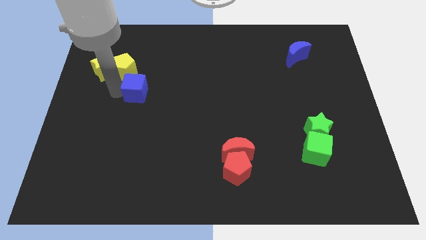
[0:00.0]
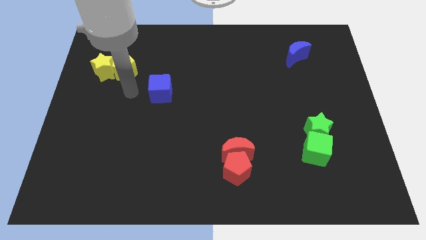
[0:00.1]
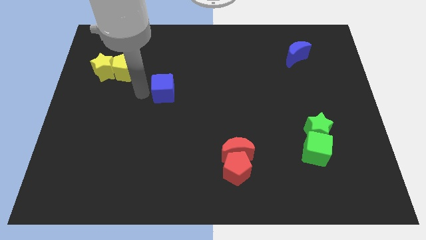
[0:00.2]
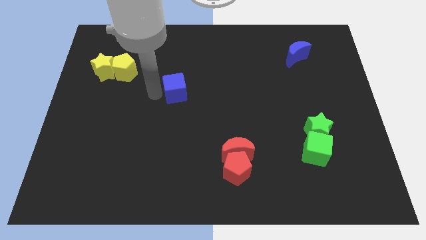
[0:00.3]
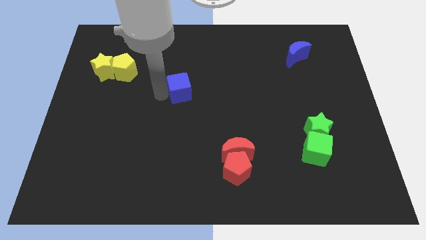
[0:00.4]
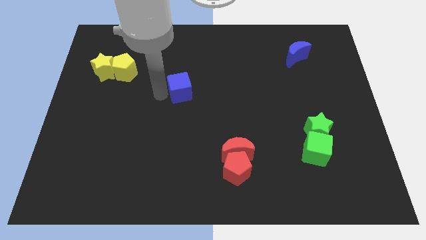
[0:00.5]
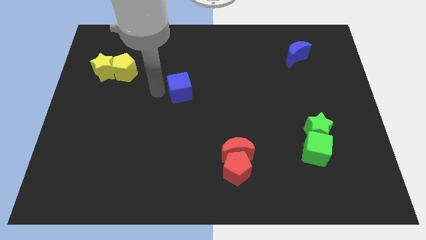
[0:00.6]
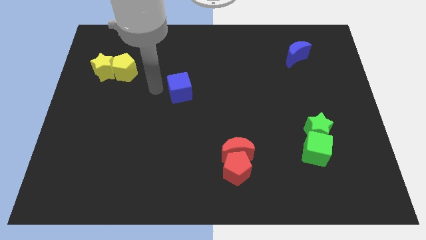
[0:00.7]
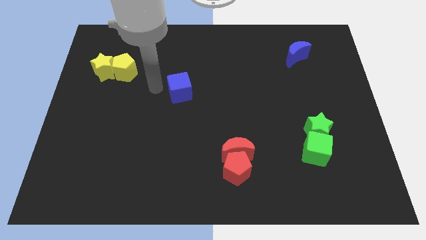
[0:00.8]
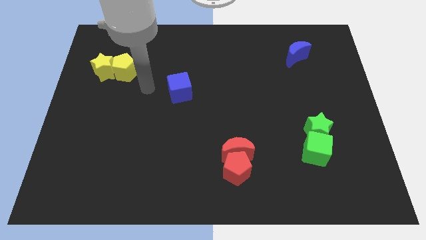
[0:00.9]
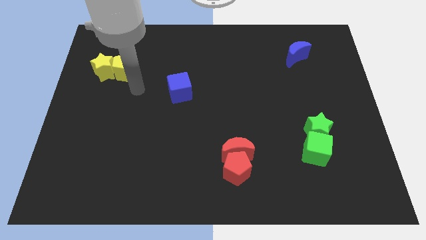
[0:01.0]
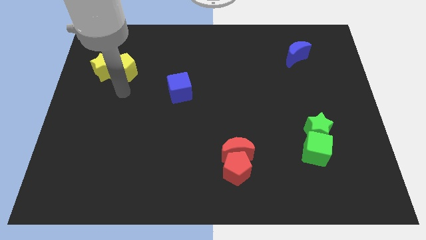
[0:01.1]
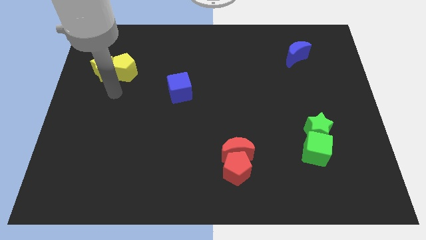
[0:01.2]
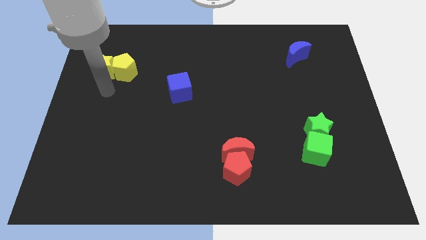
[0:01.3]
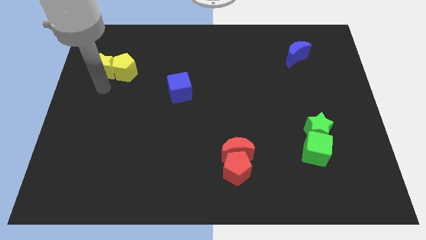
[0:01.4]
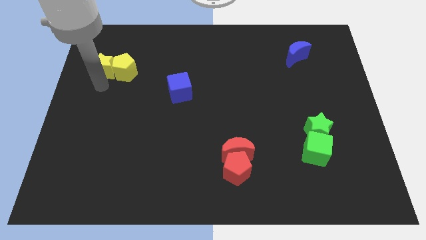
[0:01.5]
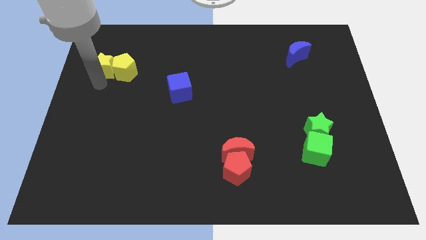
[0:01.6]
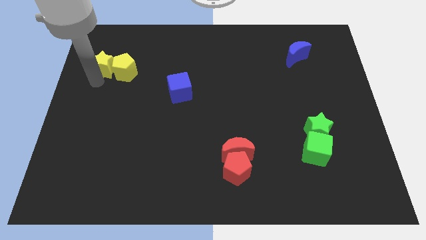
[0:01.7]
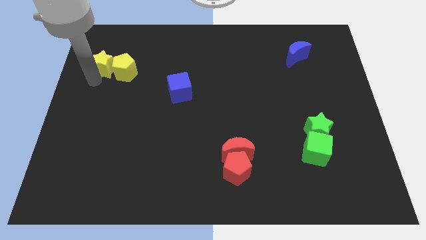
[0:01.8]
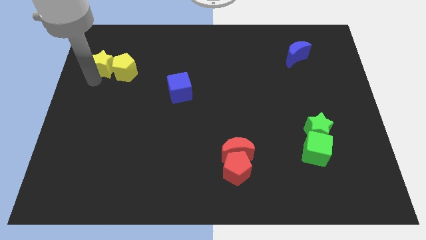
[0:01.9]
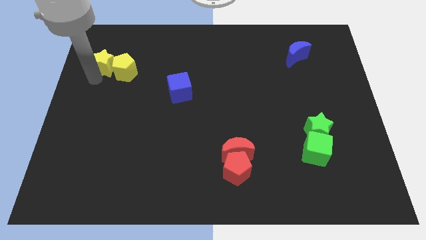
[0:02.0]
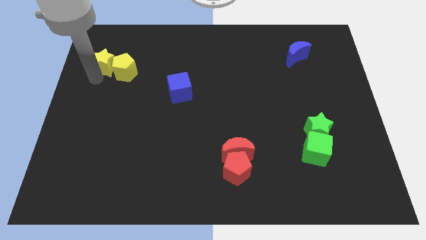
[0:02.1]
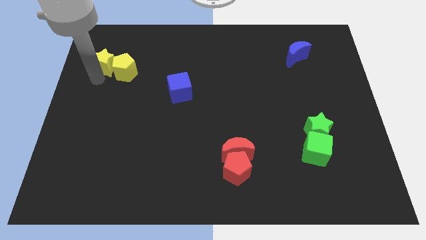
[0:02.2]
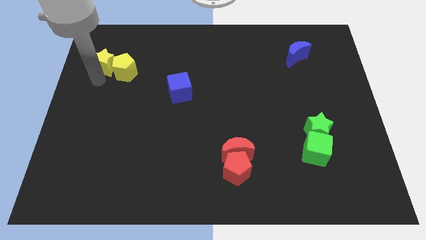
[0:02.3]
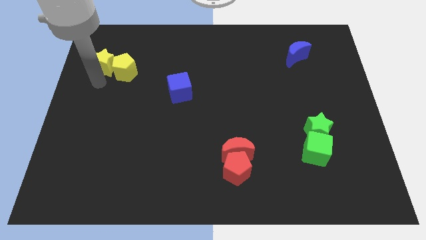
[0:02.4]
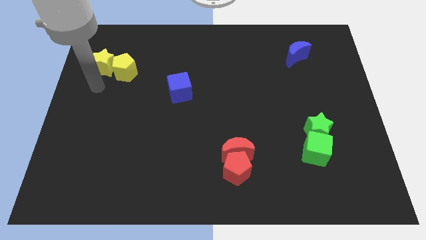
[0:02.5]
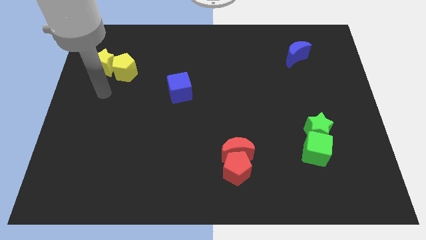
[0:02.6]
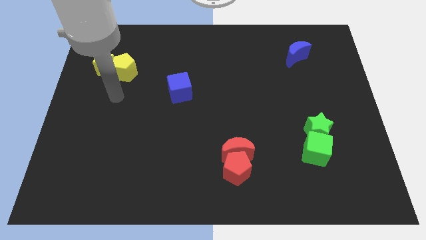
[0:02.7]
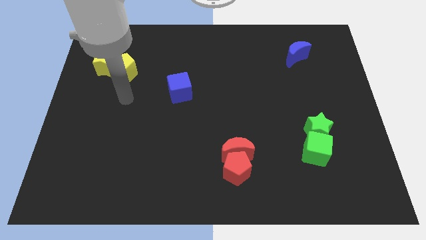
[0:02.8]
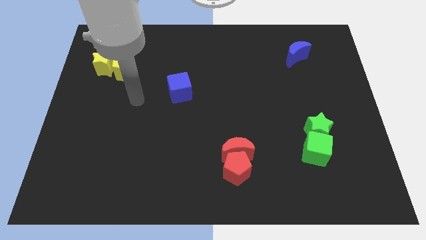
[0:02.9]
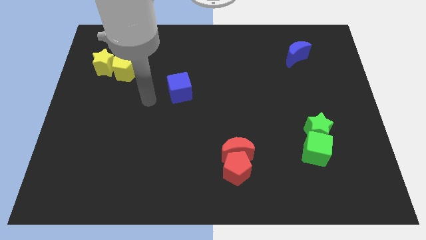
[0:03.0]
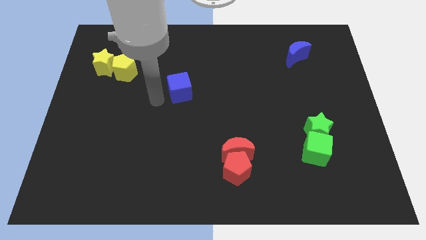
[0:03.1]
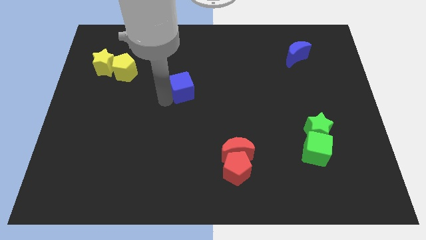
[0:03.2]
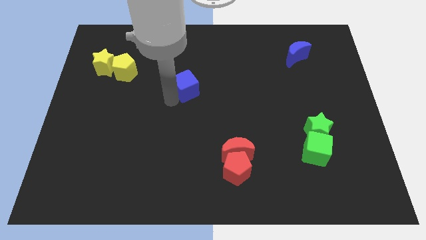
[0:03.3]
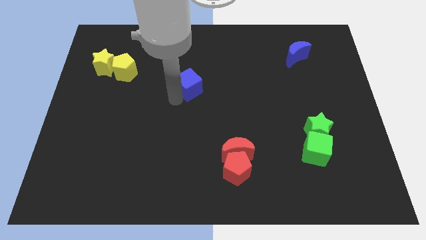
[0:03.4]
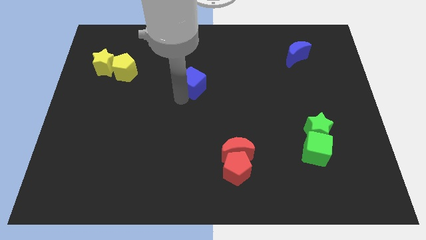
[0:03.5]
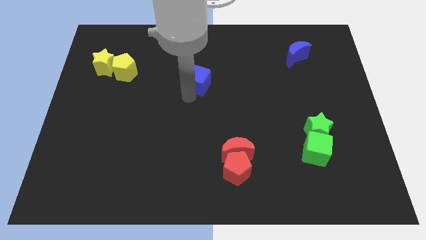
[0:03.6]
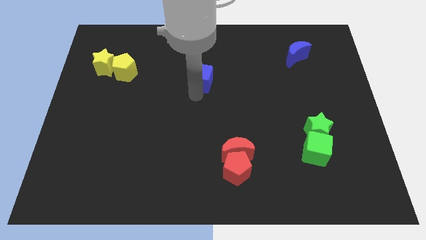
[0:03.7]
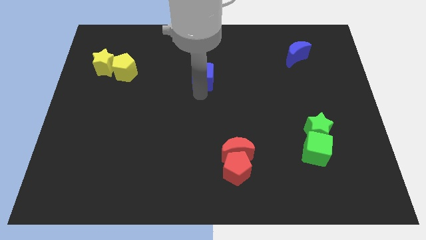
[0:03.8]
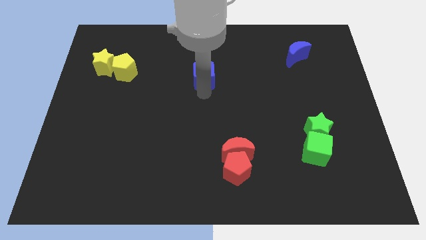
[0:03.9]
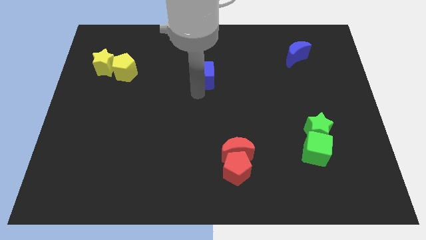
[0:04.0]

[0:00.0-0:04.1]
place the blue cube to the center of the board

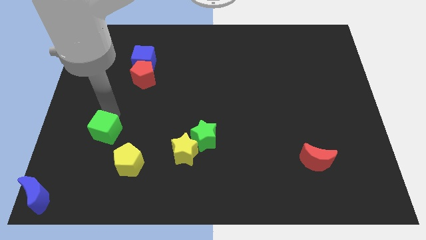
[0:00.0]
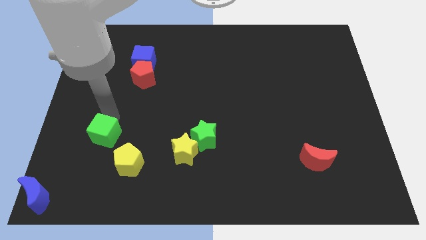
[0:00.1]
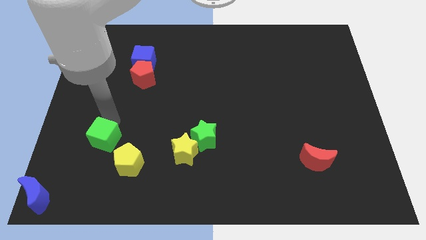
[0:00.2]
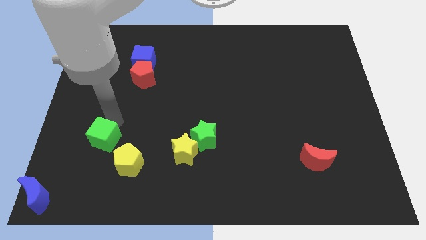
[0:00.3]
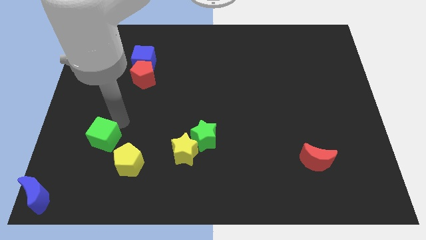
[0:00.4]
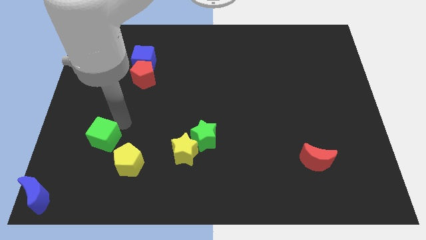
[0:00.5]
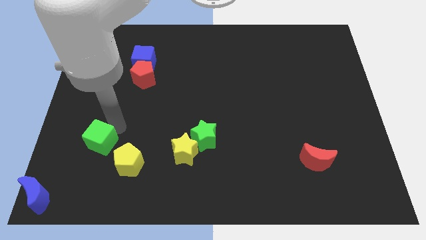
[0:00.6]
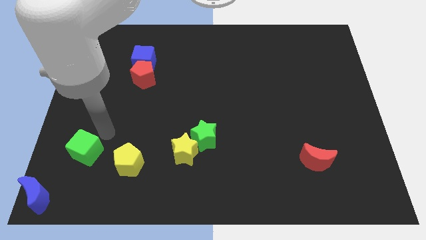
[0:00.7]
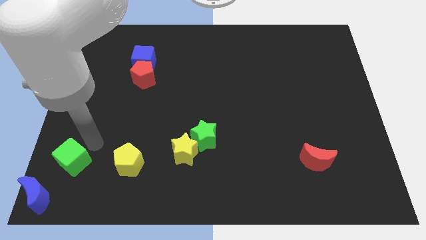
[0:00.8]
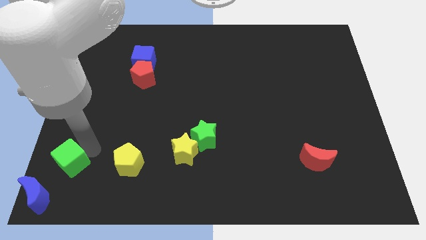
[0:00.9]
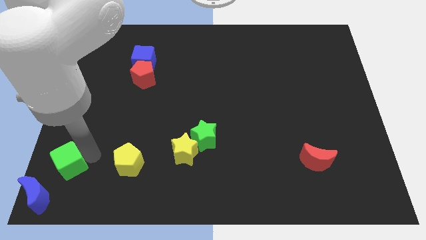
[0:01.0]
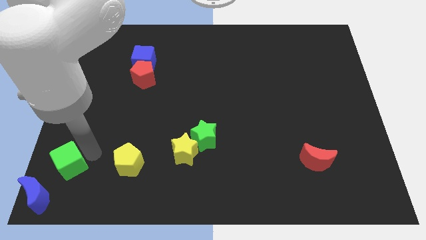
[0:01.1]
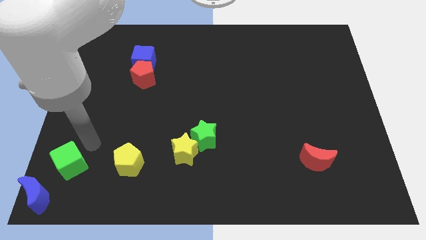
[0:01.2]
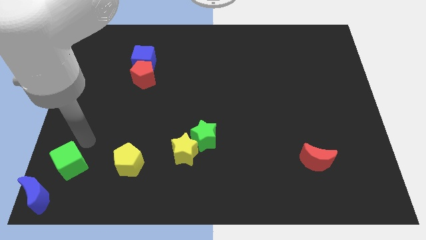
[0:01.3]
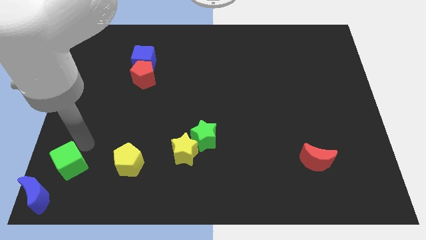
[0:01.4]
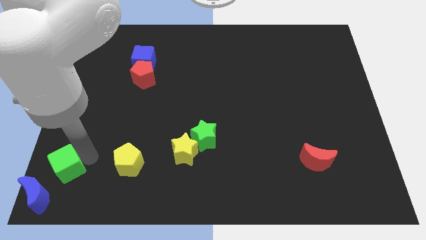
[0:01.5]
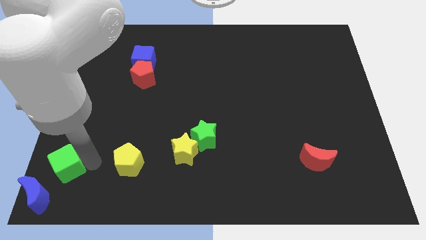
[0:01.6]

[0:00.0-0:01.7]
push green cube towards blue crescent

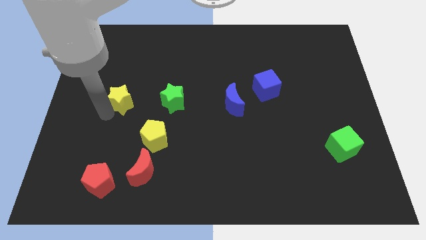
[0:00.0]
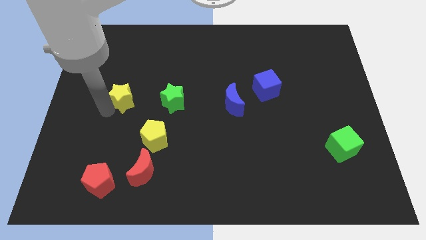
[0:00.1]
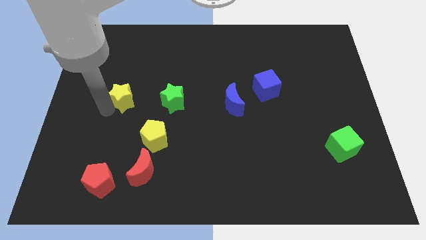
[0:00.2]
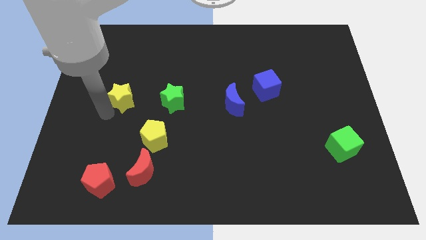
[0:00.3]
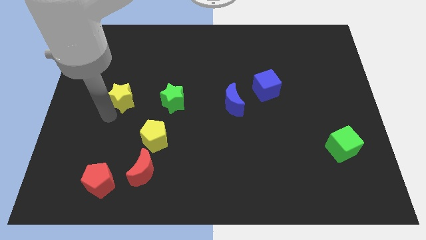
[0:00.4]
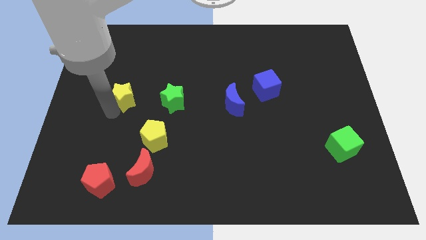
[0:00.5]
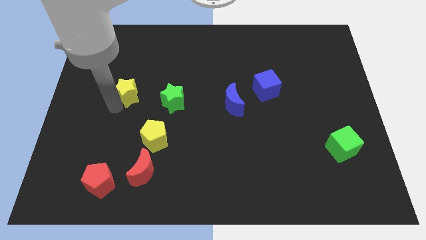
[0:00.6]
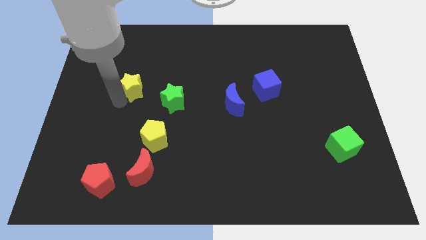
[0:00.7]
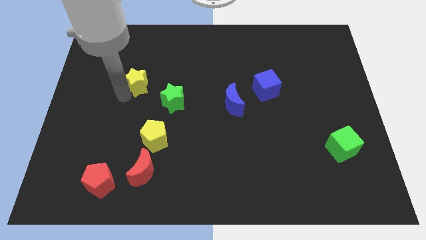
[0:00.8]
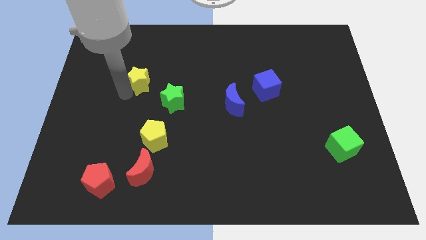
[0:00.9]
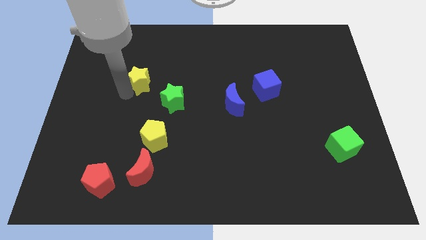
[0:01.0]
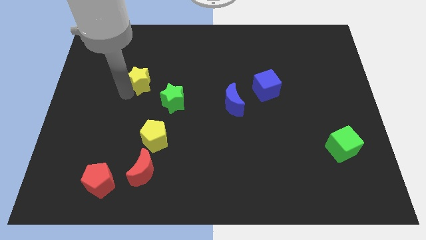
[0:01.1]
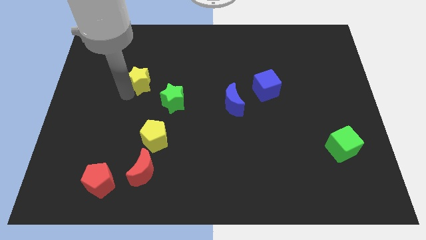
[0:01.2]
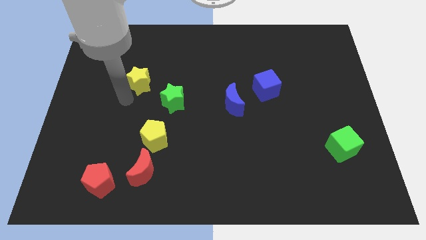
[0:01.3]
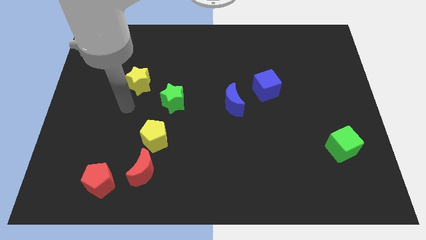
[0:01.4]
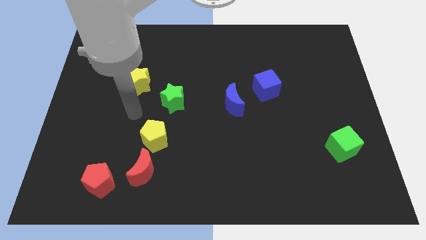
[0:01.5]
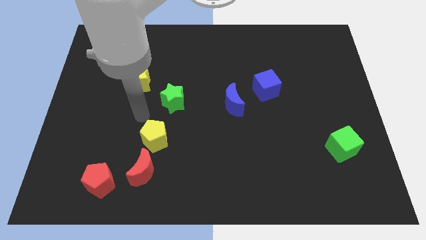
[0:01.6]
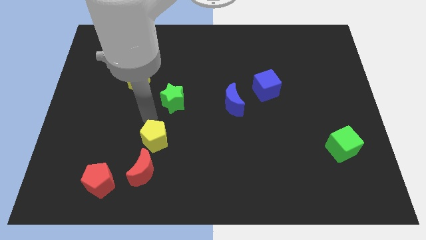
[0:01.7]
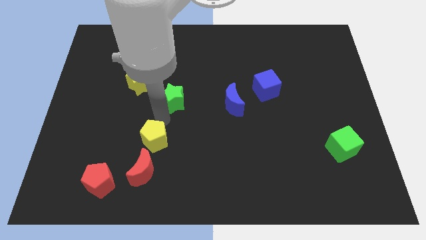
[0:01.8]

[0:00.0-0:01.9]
push yellow star slightly upwards

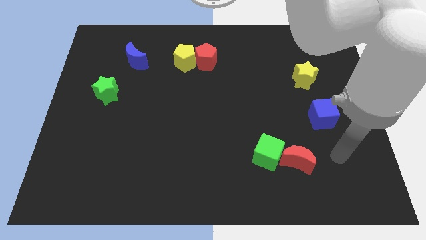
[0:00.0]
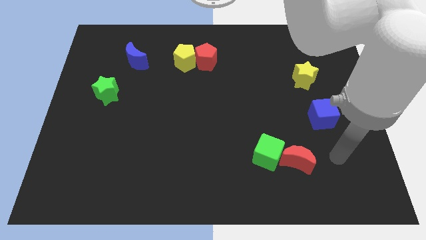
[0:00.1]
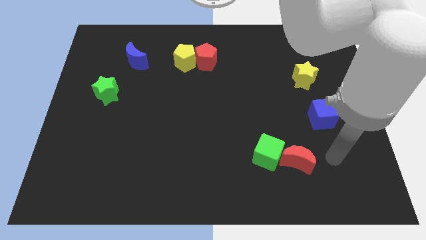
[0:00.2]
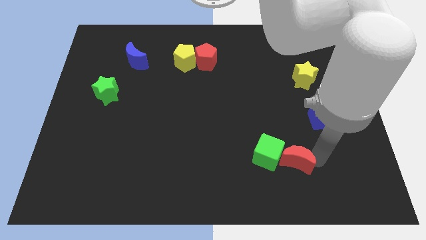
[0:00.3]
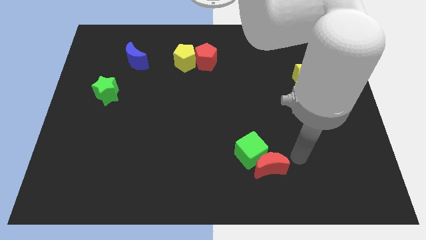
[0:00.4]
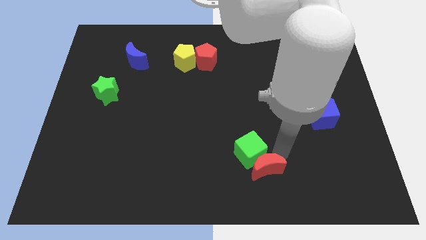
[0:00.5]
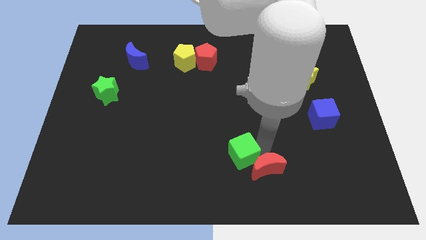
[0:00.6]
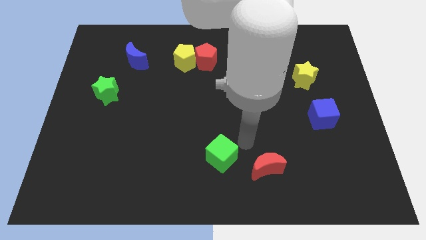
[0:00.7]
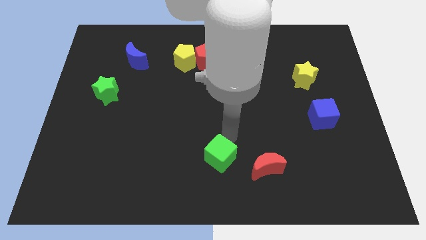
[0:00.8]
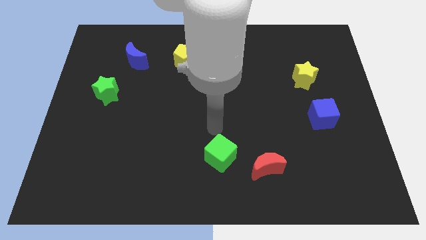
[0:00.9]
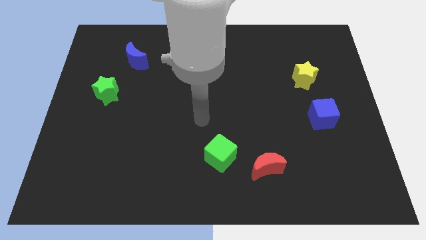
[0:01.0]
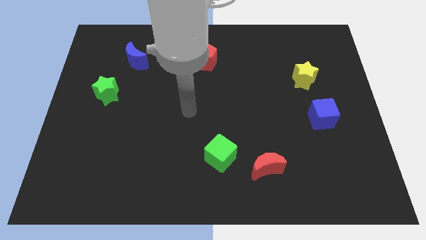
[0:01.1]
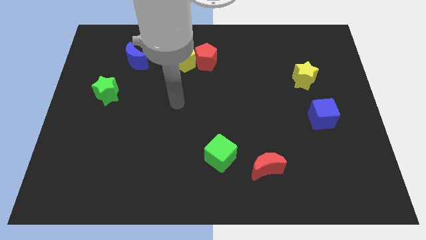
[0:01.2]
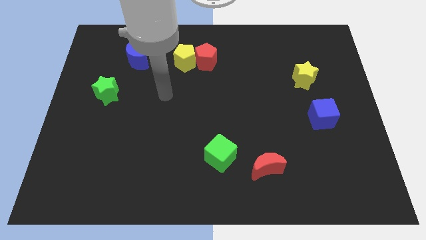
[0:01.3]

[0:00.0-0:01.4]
slightly move the green cube to the top left of the red crescent
